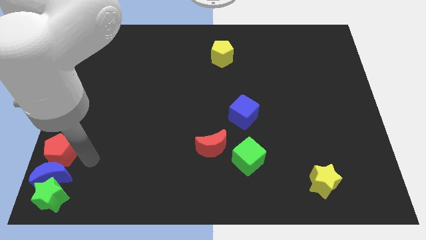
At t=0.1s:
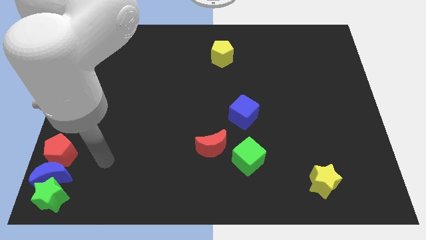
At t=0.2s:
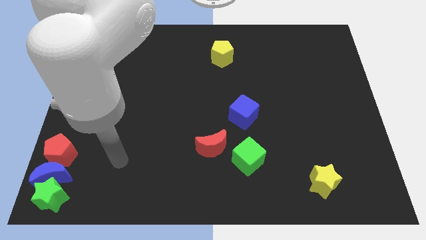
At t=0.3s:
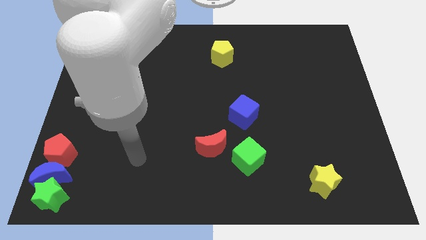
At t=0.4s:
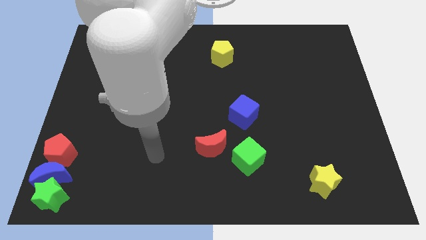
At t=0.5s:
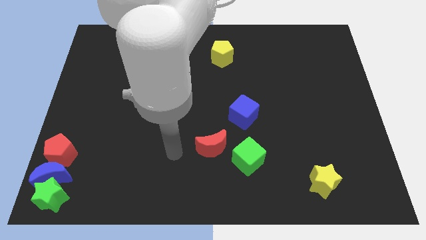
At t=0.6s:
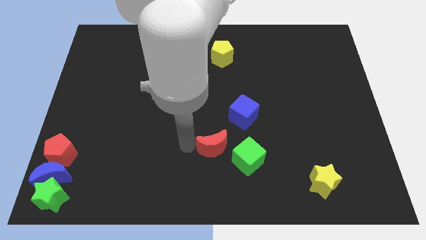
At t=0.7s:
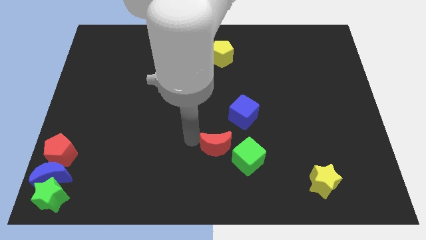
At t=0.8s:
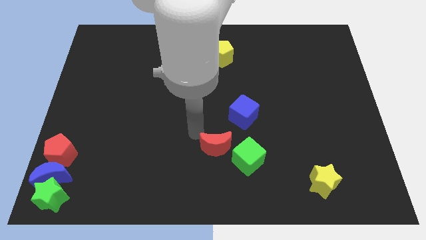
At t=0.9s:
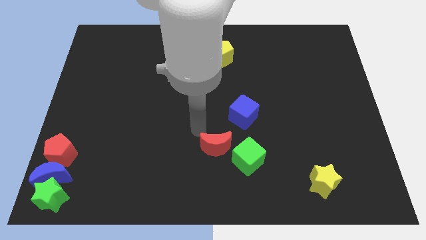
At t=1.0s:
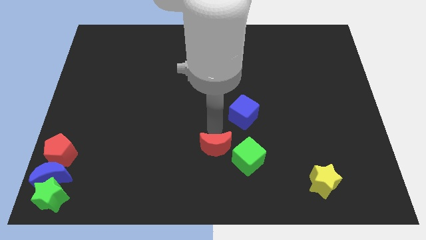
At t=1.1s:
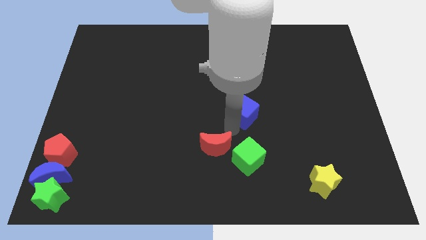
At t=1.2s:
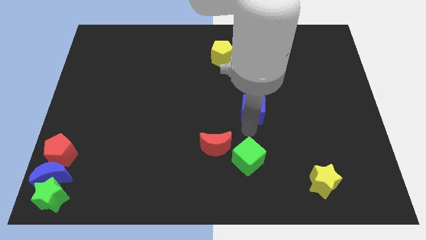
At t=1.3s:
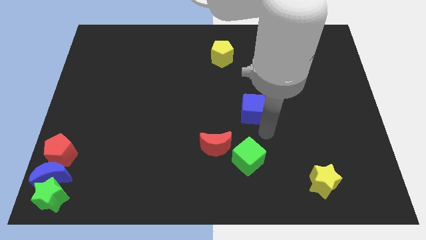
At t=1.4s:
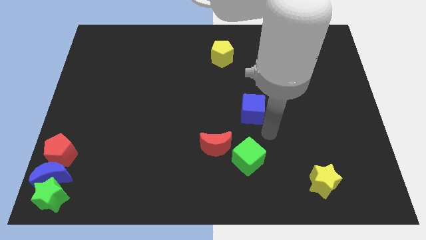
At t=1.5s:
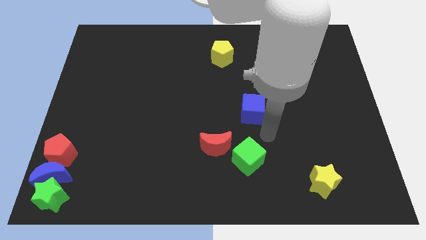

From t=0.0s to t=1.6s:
move your arm away from the red pentagon

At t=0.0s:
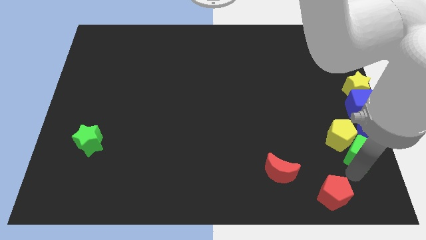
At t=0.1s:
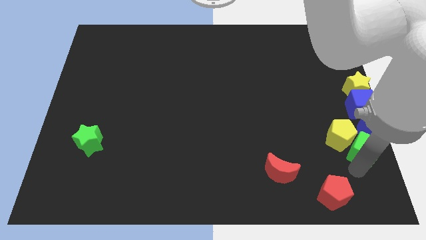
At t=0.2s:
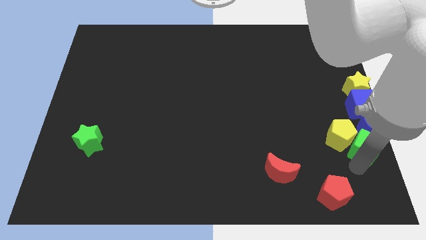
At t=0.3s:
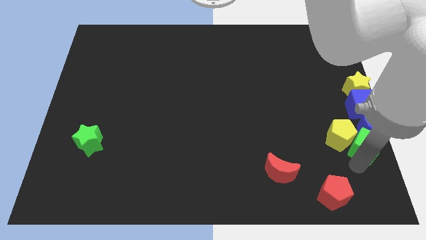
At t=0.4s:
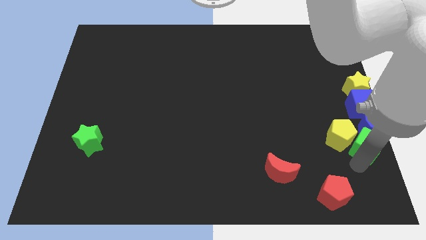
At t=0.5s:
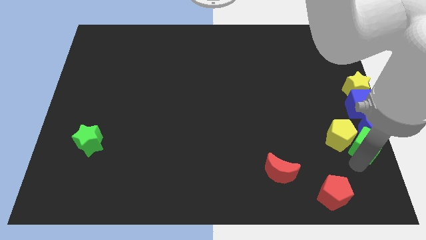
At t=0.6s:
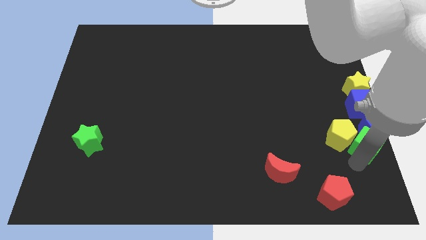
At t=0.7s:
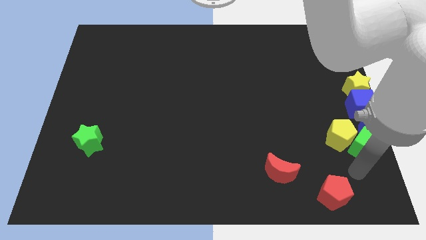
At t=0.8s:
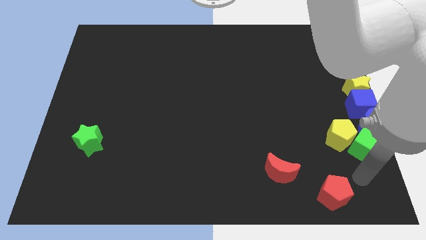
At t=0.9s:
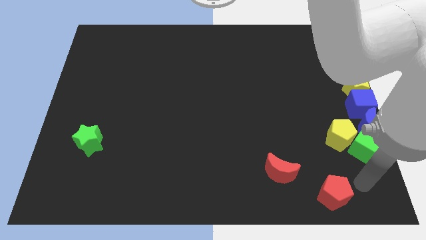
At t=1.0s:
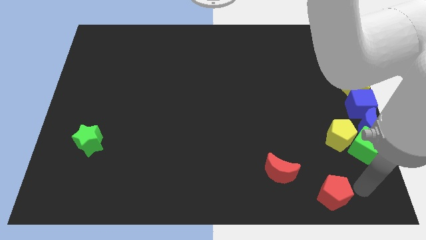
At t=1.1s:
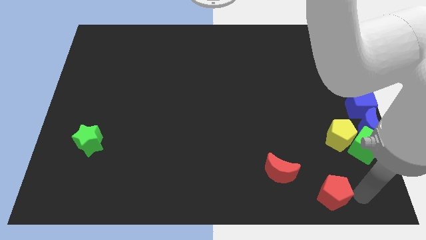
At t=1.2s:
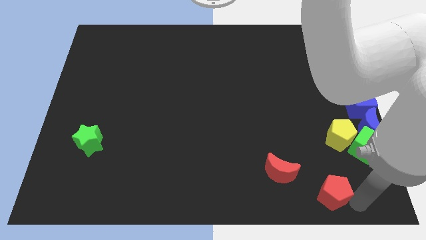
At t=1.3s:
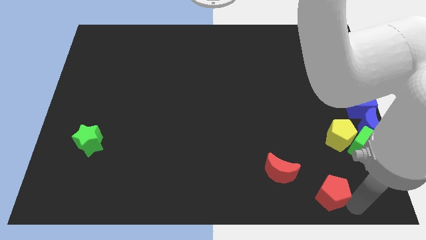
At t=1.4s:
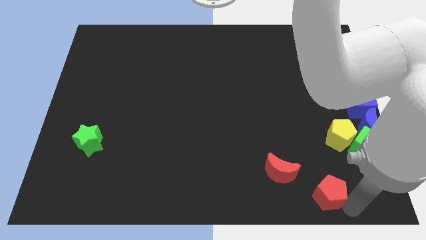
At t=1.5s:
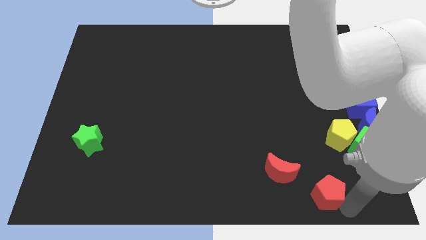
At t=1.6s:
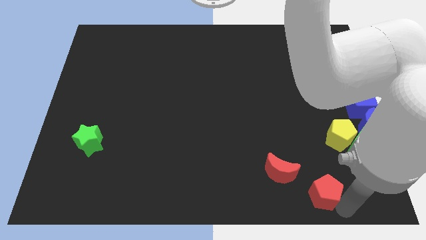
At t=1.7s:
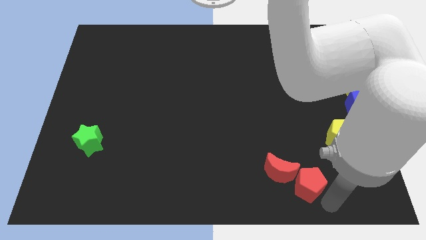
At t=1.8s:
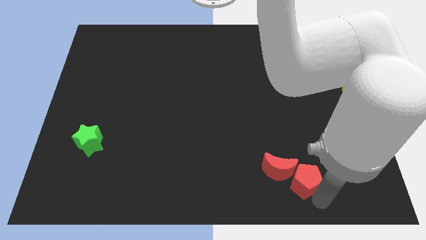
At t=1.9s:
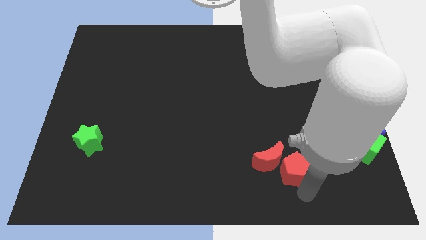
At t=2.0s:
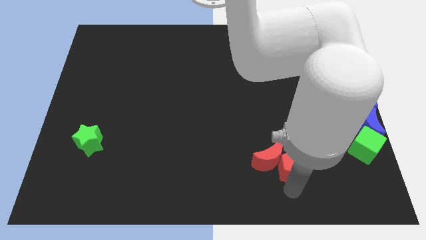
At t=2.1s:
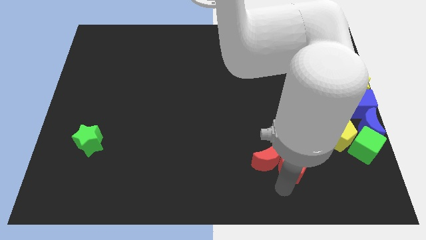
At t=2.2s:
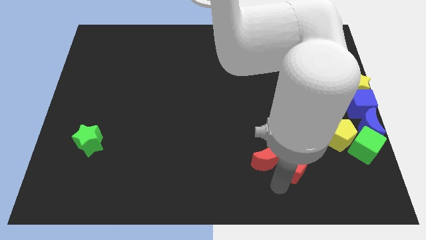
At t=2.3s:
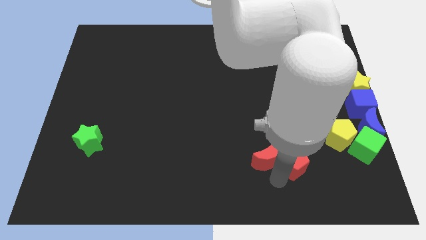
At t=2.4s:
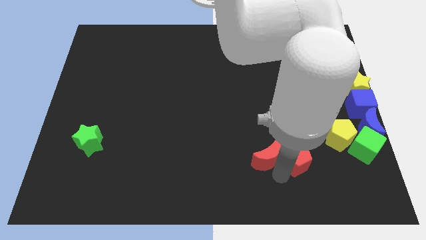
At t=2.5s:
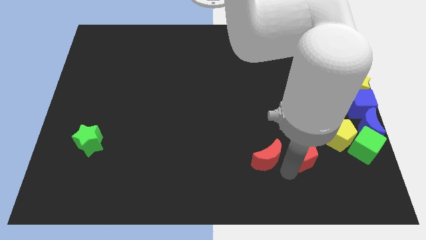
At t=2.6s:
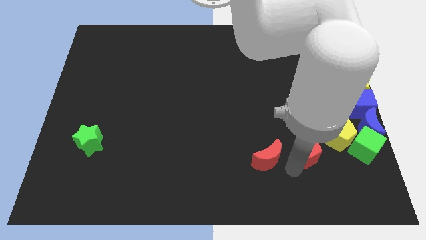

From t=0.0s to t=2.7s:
place red pentagon to the right of red moon

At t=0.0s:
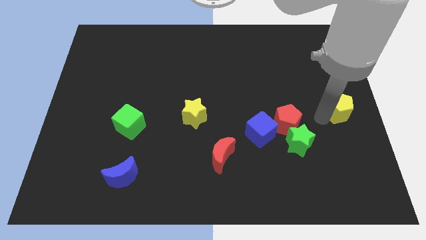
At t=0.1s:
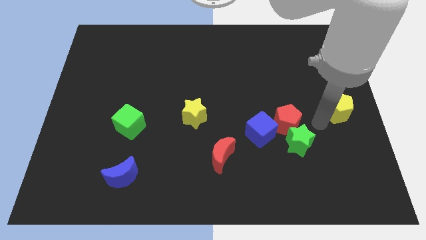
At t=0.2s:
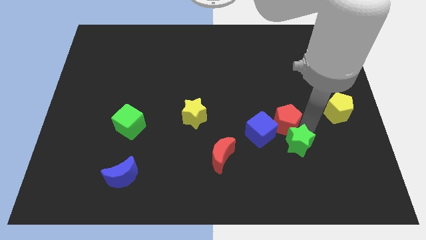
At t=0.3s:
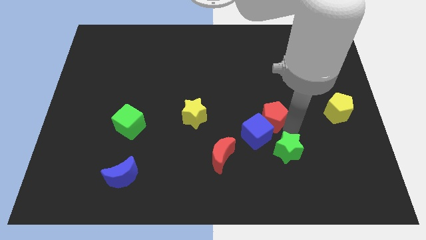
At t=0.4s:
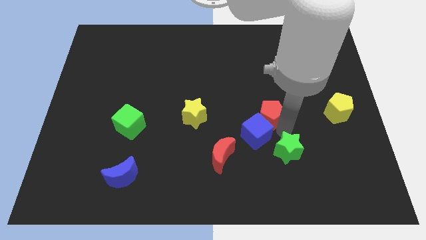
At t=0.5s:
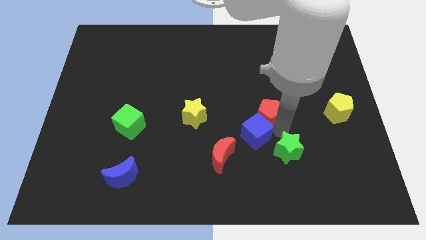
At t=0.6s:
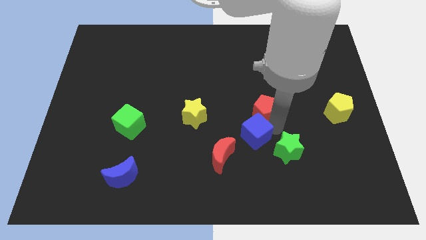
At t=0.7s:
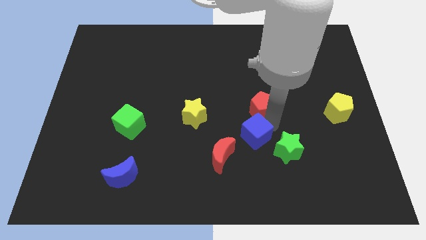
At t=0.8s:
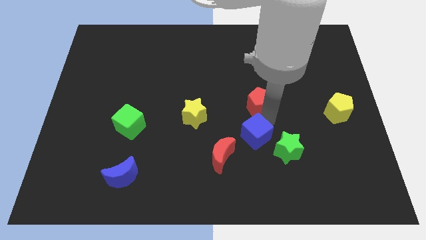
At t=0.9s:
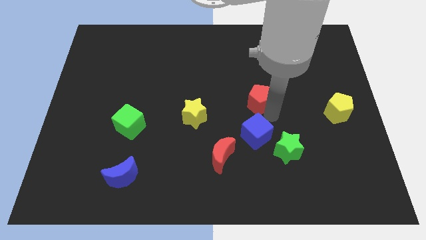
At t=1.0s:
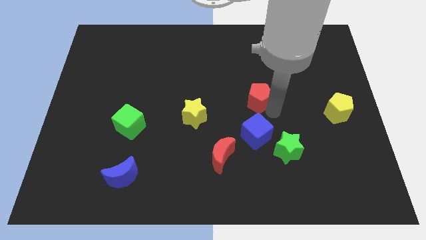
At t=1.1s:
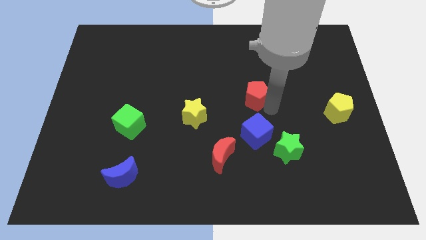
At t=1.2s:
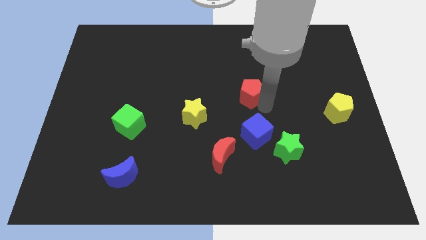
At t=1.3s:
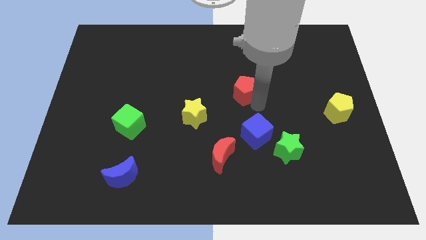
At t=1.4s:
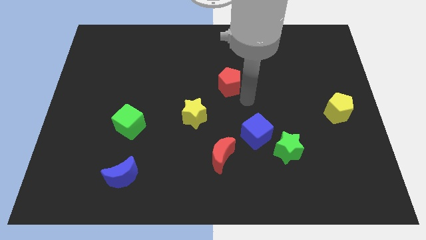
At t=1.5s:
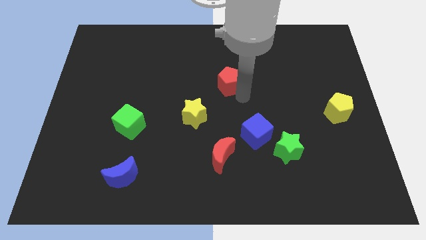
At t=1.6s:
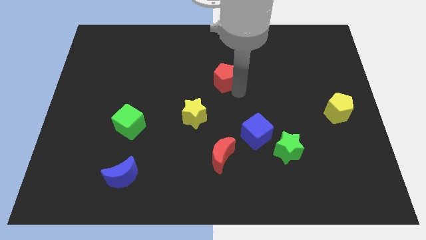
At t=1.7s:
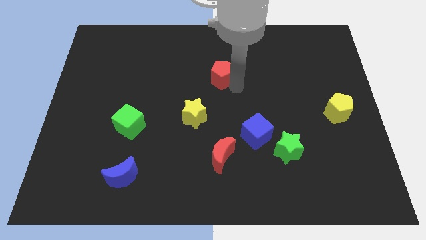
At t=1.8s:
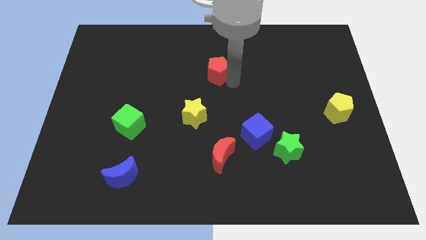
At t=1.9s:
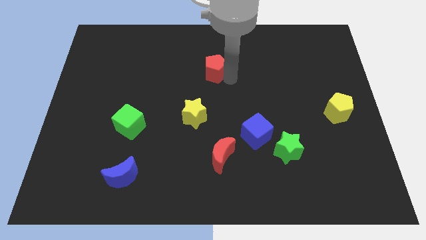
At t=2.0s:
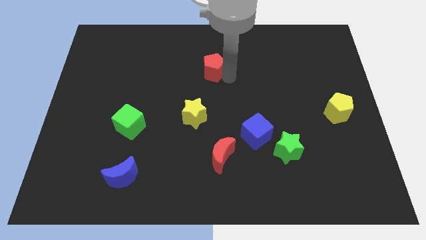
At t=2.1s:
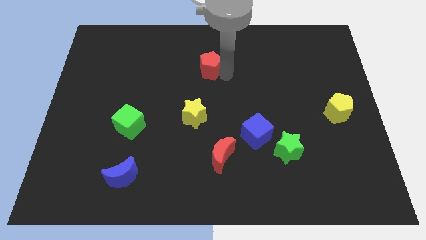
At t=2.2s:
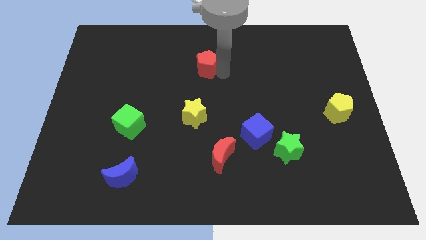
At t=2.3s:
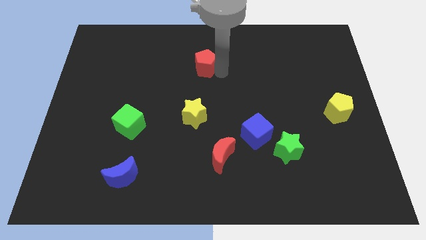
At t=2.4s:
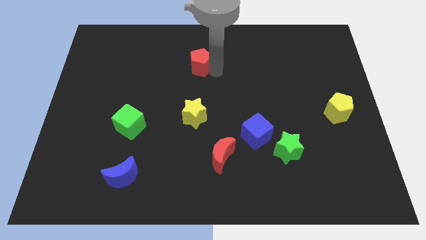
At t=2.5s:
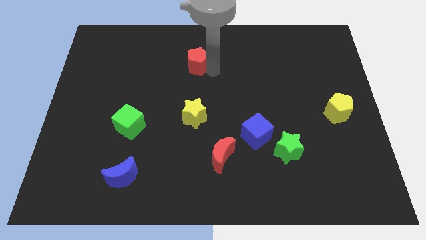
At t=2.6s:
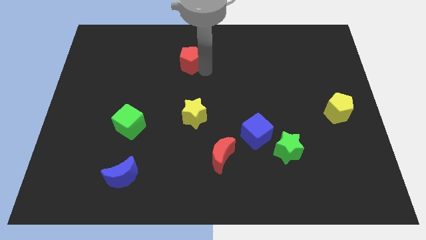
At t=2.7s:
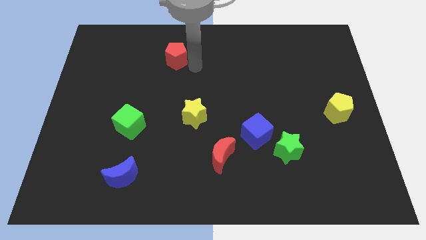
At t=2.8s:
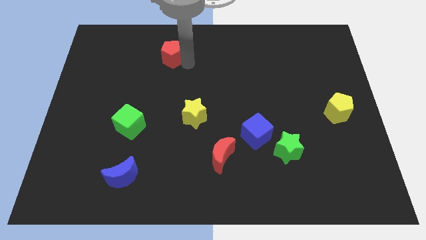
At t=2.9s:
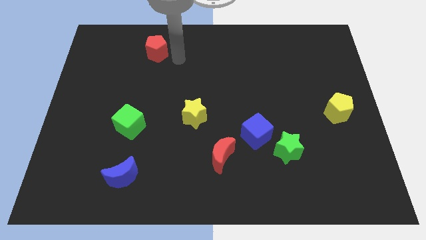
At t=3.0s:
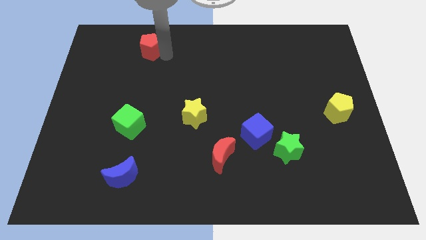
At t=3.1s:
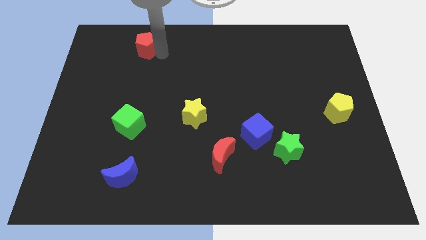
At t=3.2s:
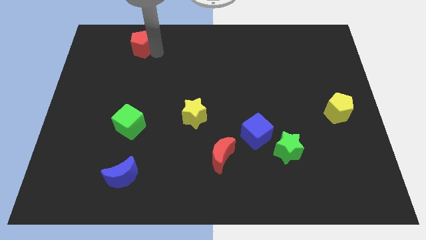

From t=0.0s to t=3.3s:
move the red pentagon to the vertical top of the green cube

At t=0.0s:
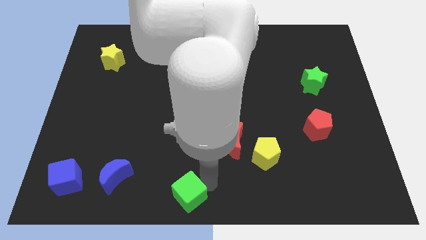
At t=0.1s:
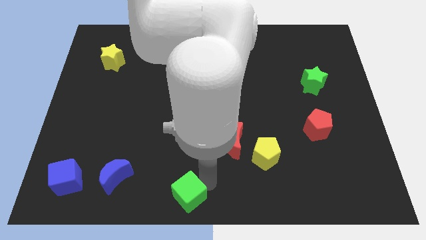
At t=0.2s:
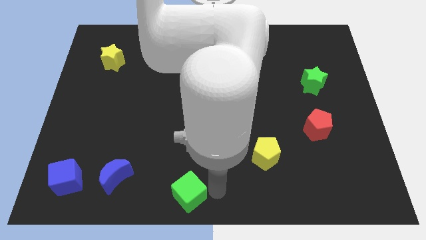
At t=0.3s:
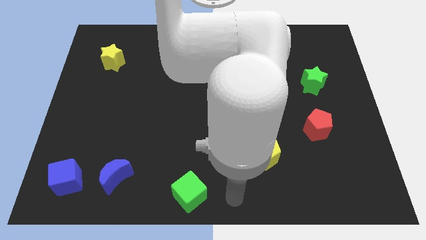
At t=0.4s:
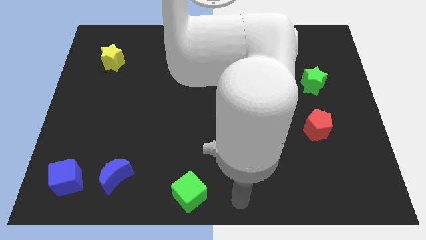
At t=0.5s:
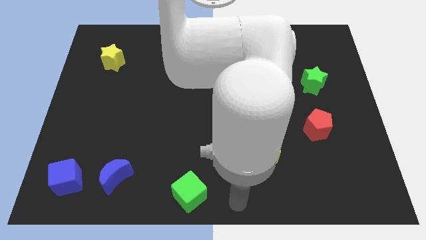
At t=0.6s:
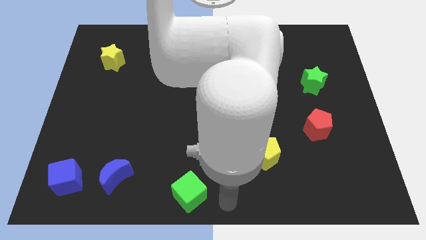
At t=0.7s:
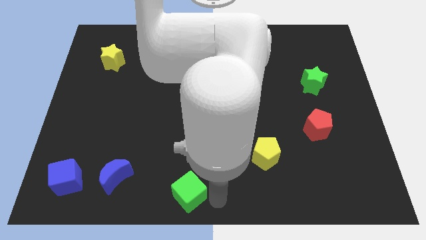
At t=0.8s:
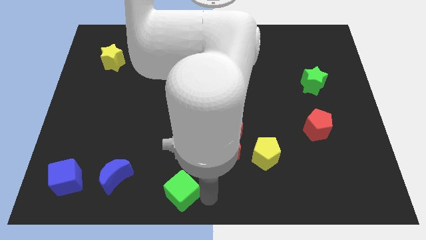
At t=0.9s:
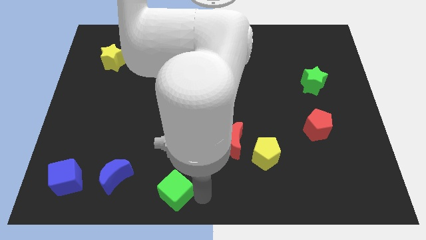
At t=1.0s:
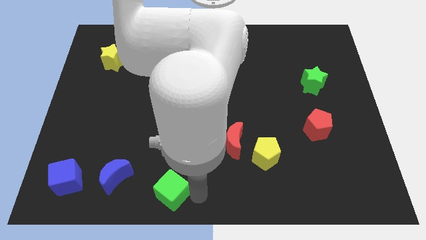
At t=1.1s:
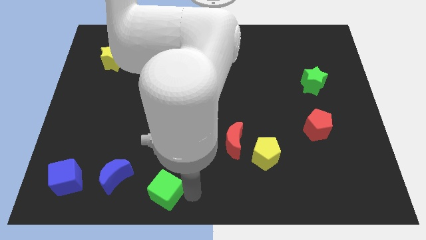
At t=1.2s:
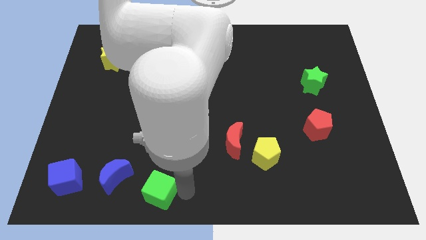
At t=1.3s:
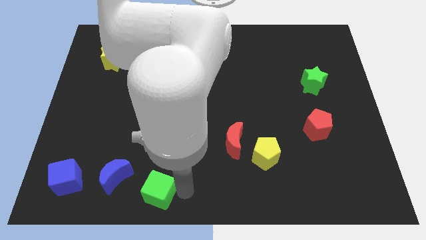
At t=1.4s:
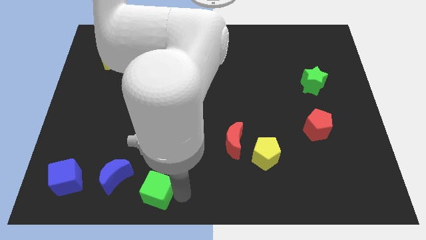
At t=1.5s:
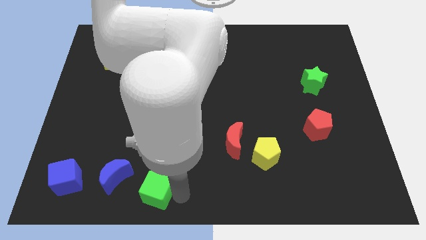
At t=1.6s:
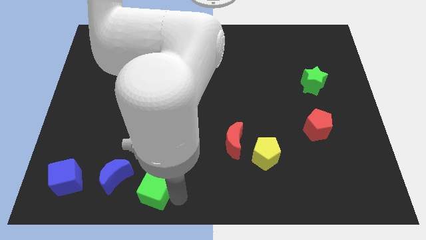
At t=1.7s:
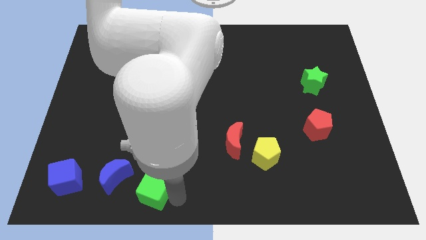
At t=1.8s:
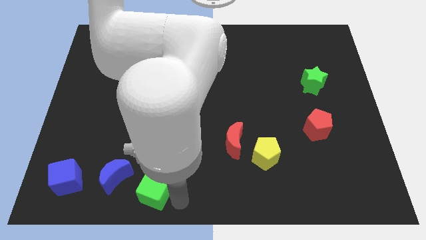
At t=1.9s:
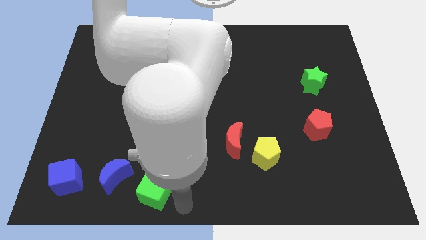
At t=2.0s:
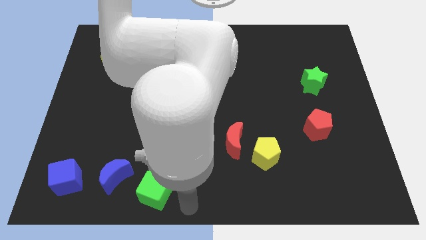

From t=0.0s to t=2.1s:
move green cube towards blue moon
